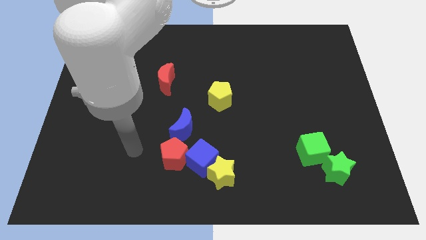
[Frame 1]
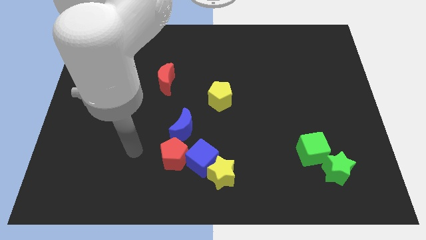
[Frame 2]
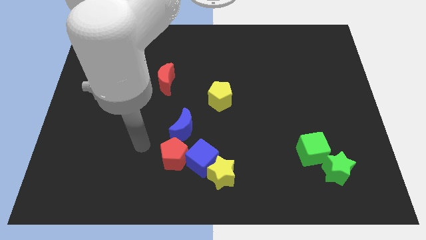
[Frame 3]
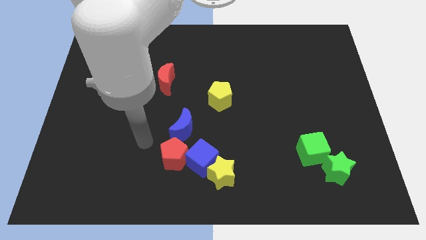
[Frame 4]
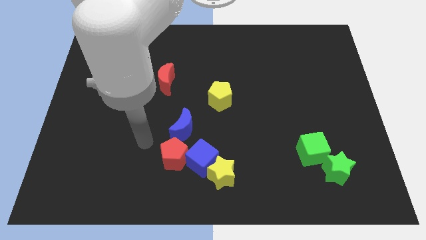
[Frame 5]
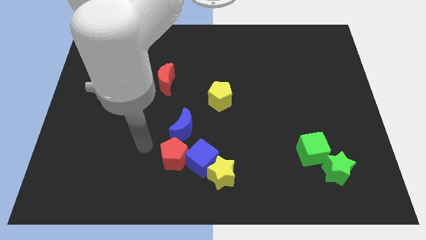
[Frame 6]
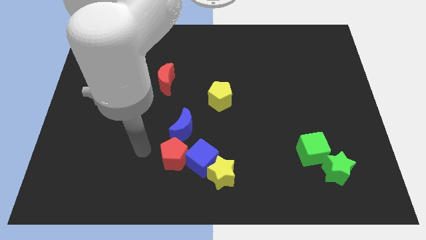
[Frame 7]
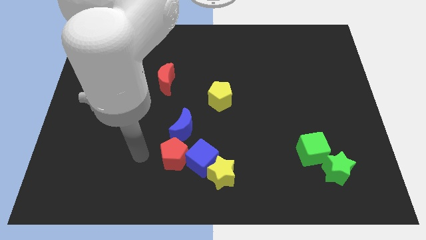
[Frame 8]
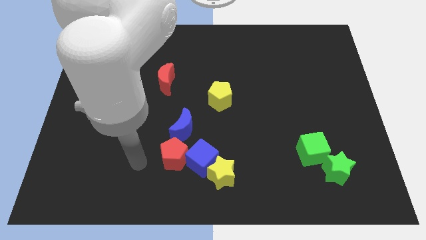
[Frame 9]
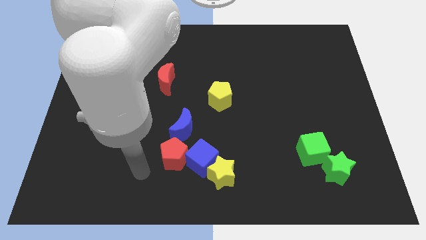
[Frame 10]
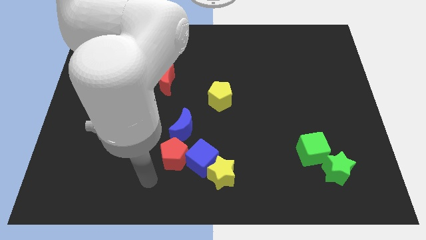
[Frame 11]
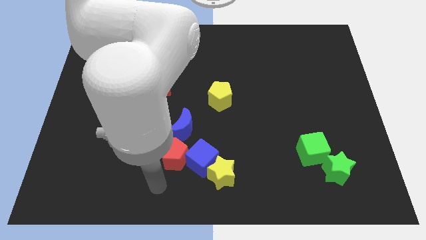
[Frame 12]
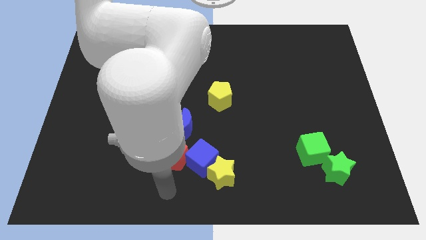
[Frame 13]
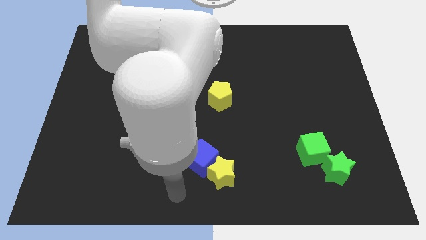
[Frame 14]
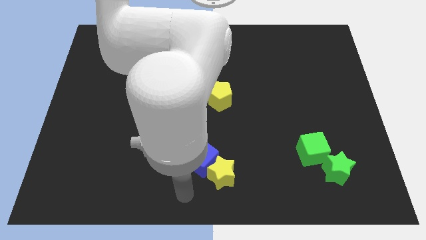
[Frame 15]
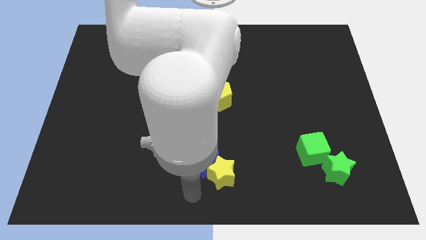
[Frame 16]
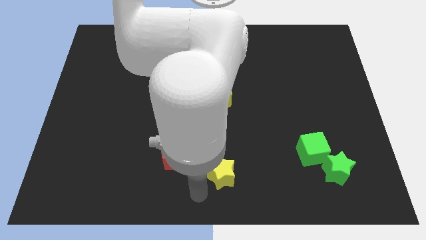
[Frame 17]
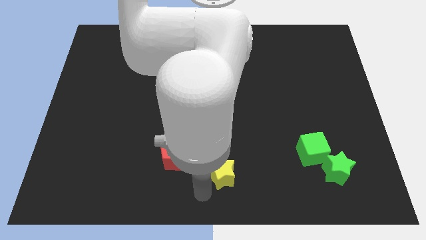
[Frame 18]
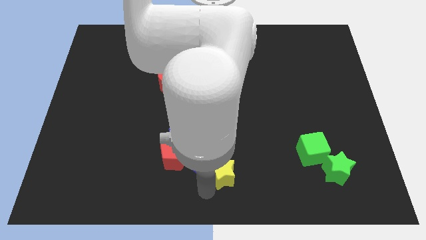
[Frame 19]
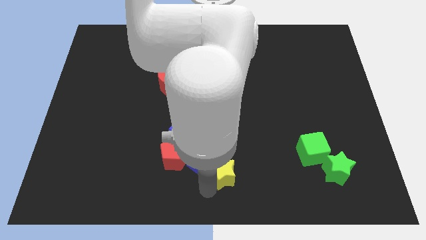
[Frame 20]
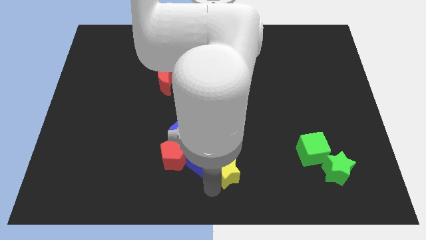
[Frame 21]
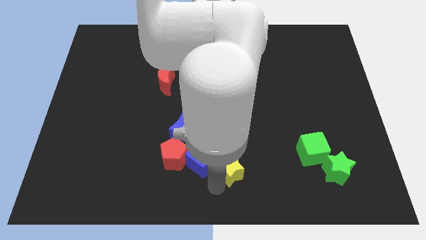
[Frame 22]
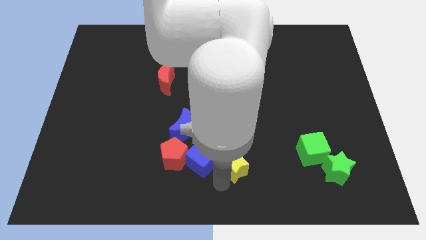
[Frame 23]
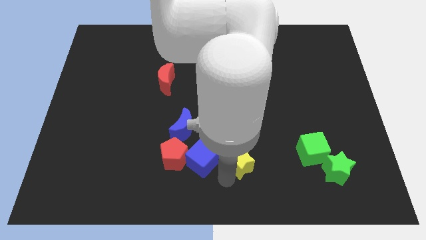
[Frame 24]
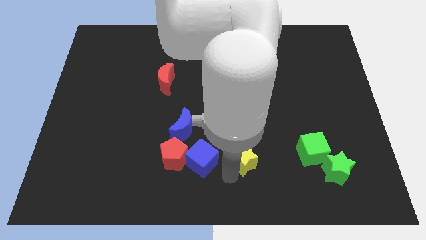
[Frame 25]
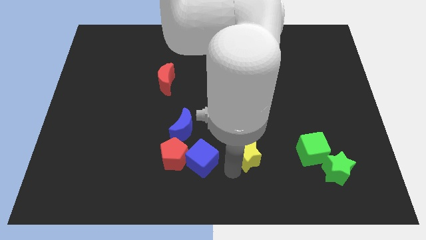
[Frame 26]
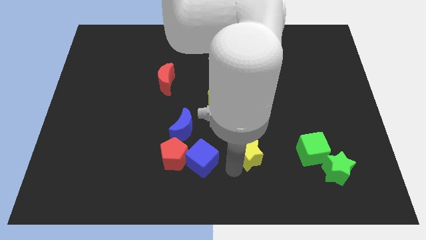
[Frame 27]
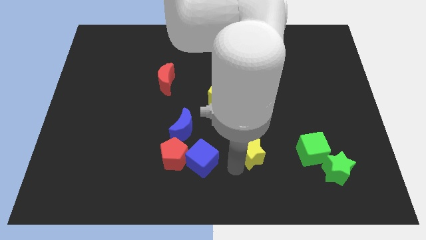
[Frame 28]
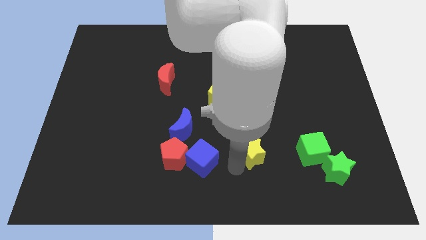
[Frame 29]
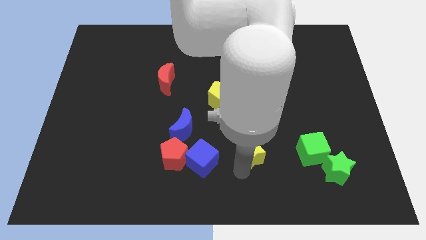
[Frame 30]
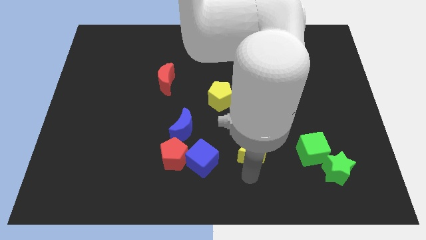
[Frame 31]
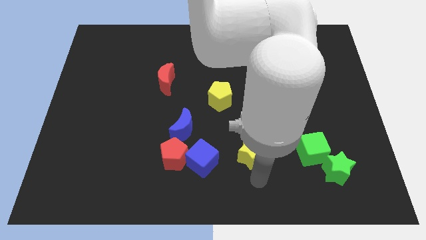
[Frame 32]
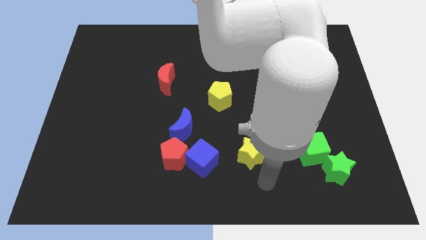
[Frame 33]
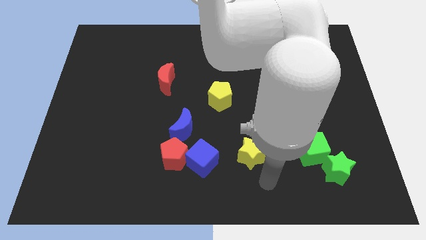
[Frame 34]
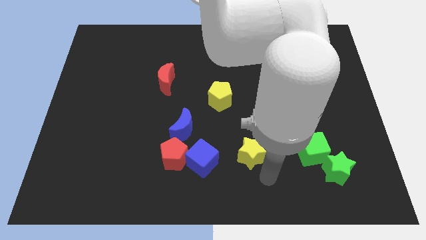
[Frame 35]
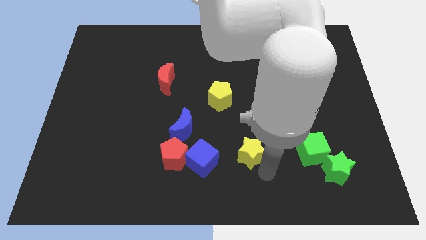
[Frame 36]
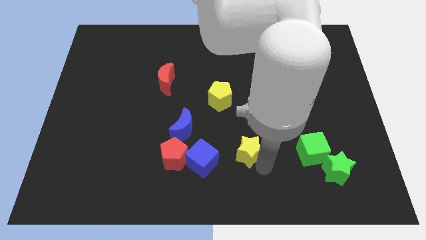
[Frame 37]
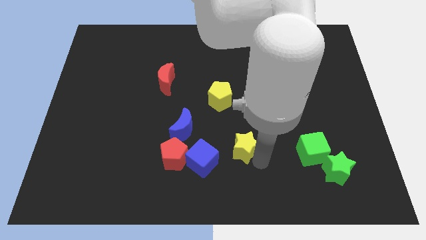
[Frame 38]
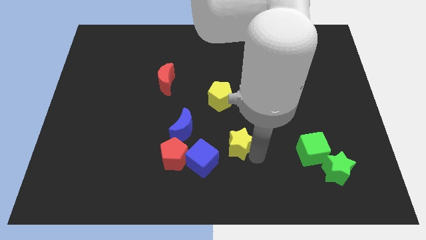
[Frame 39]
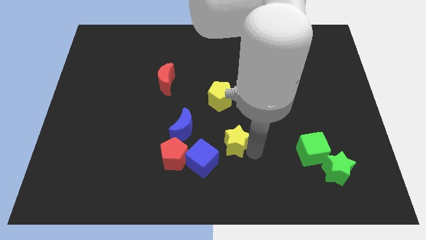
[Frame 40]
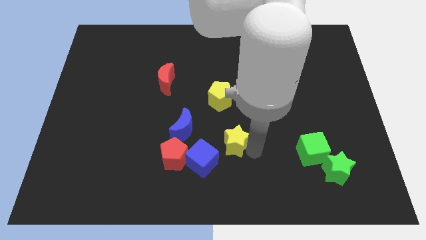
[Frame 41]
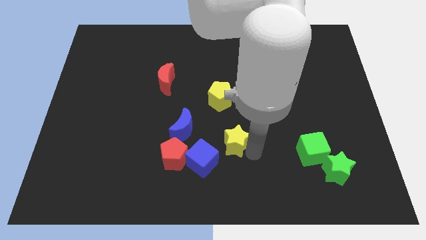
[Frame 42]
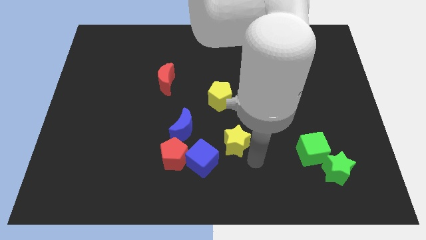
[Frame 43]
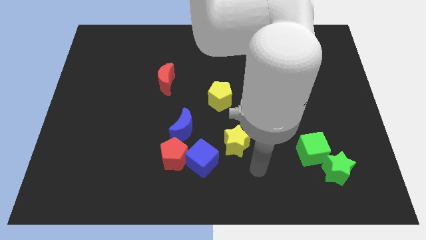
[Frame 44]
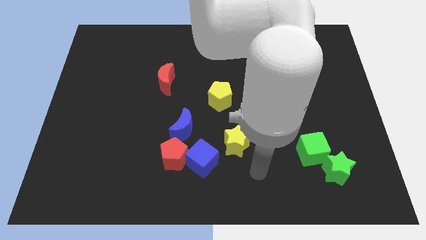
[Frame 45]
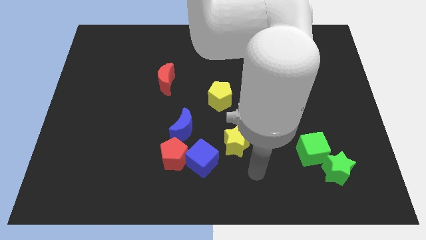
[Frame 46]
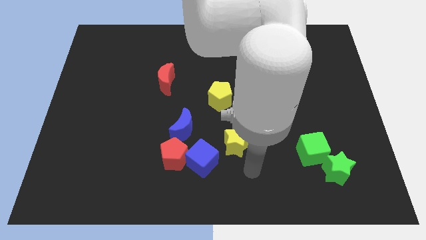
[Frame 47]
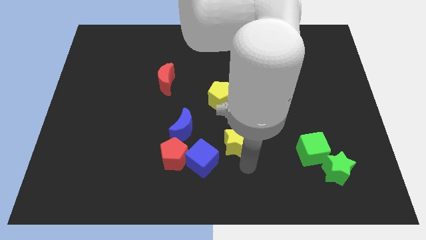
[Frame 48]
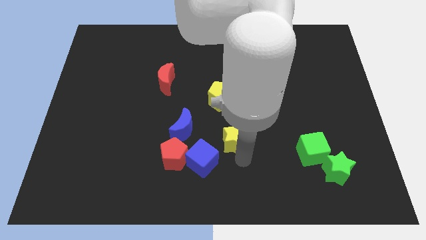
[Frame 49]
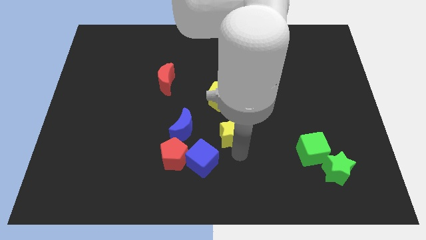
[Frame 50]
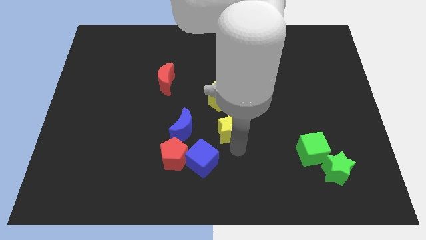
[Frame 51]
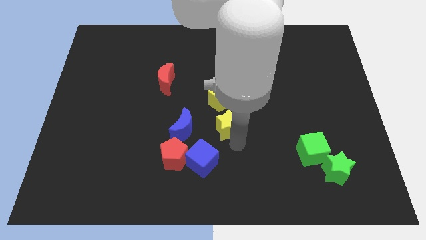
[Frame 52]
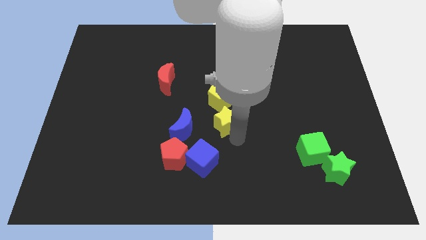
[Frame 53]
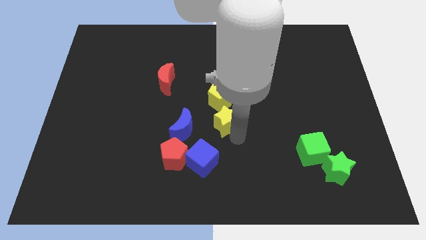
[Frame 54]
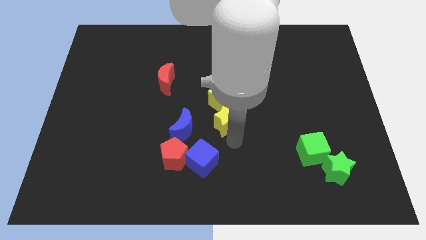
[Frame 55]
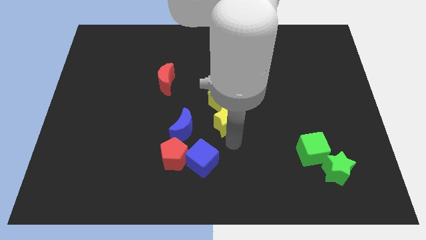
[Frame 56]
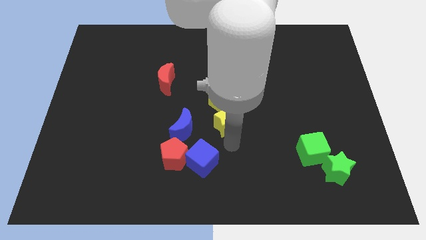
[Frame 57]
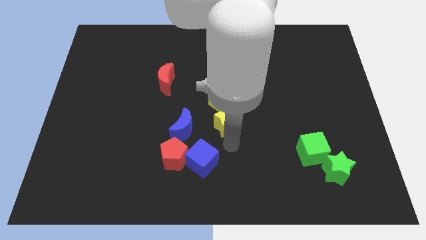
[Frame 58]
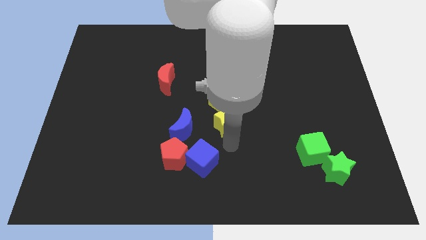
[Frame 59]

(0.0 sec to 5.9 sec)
move the yellow star near to the yellow pentagon

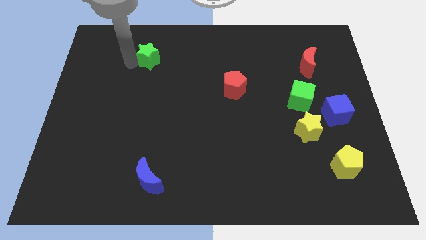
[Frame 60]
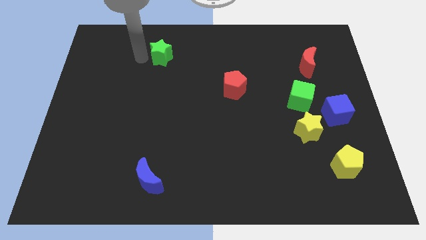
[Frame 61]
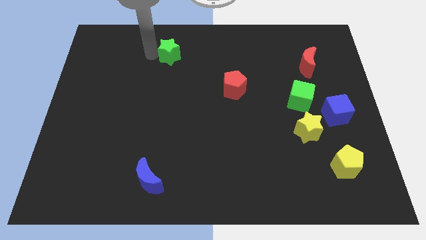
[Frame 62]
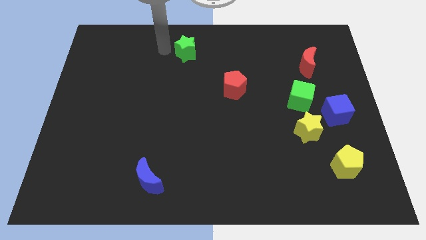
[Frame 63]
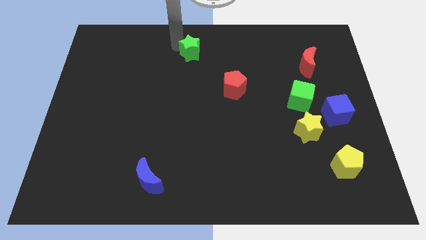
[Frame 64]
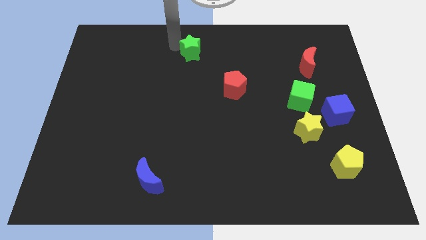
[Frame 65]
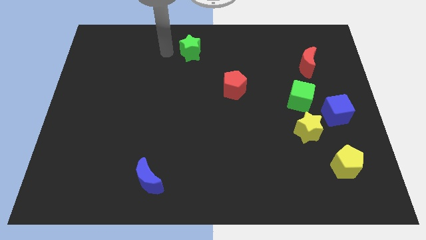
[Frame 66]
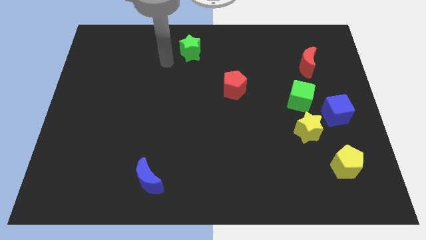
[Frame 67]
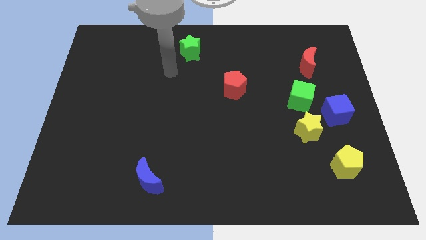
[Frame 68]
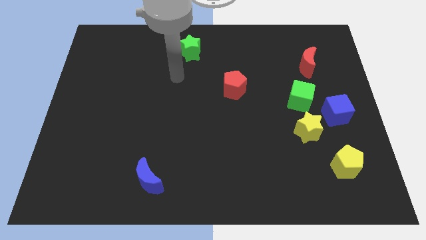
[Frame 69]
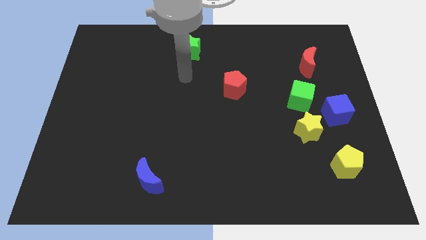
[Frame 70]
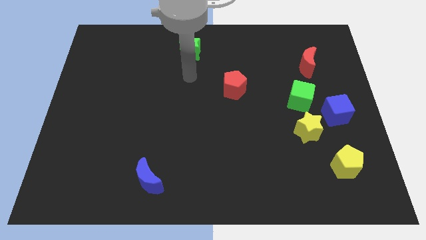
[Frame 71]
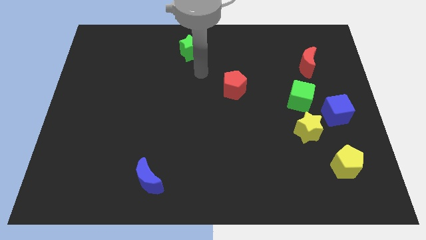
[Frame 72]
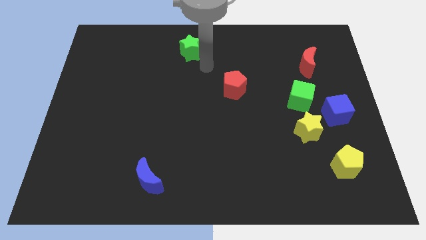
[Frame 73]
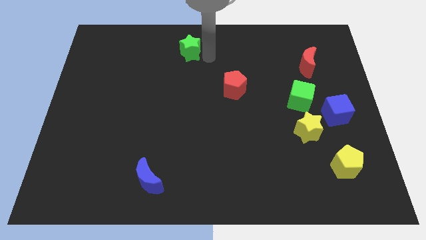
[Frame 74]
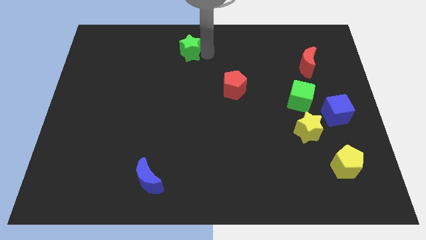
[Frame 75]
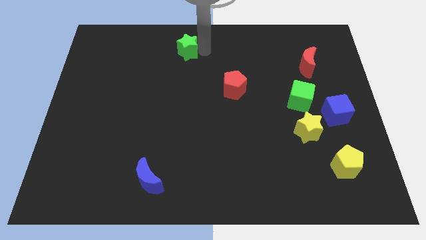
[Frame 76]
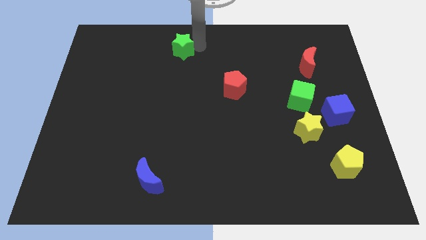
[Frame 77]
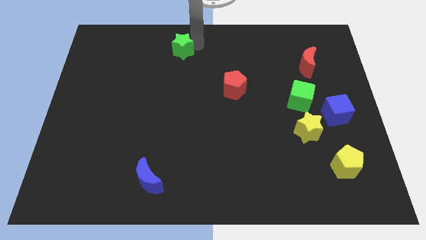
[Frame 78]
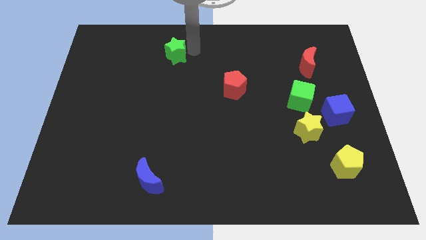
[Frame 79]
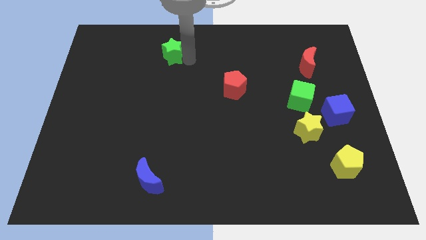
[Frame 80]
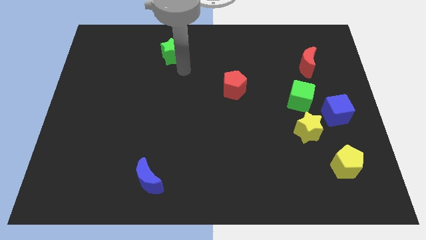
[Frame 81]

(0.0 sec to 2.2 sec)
move the green star slightly to the top center of the board

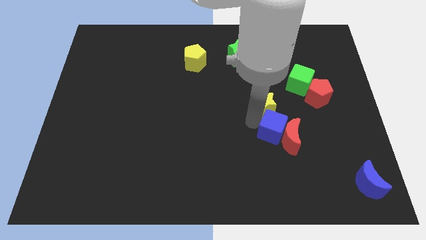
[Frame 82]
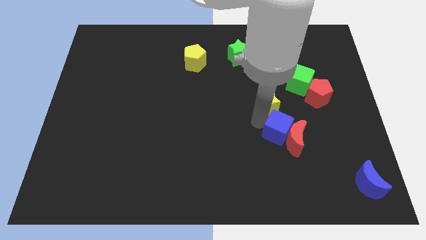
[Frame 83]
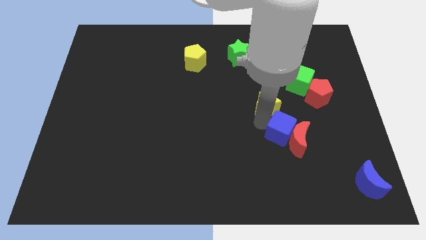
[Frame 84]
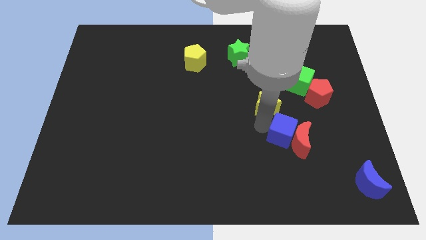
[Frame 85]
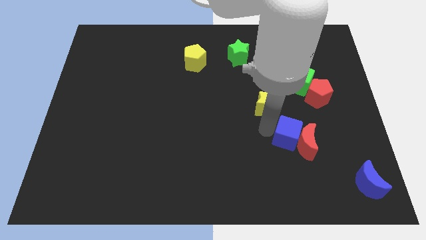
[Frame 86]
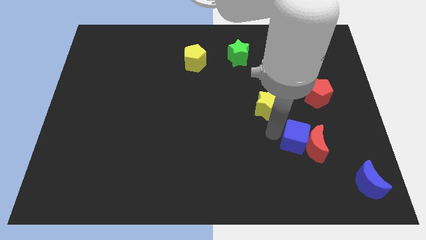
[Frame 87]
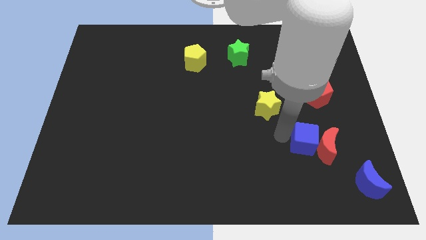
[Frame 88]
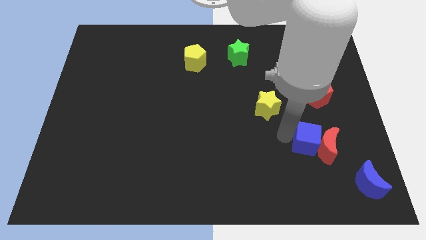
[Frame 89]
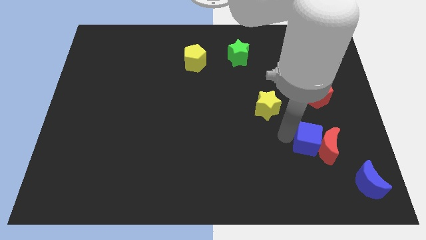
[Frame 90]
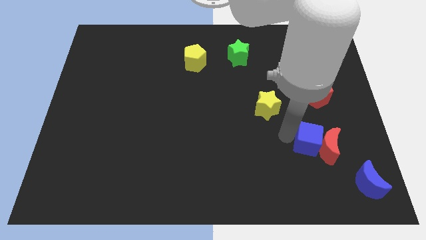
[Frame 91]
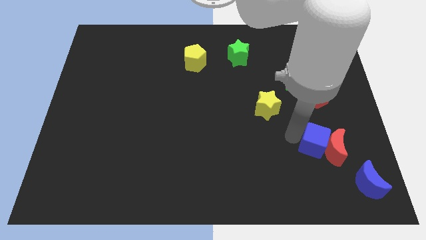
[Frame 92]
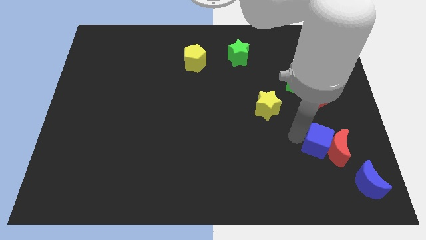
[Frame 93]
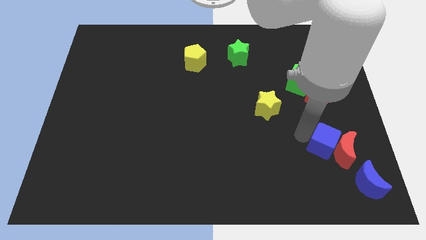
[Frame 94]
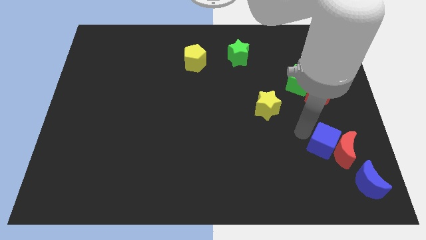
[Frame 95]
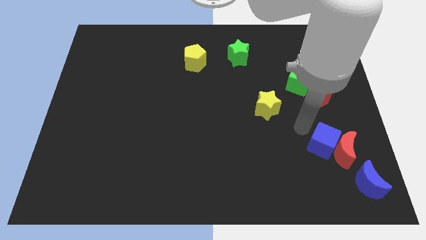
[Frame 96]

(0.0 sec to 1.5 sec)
separate blue cube and the red moon from the yellow star
